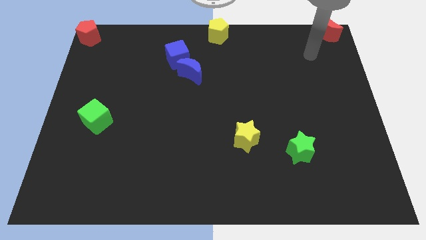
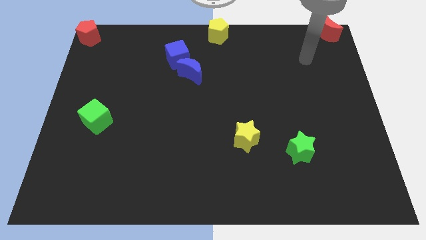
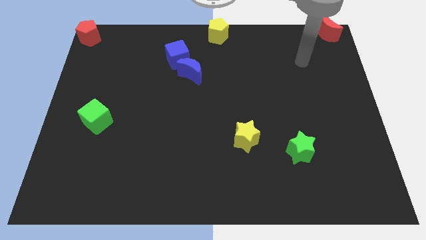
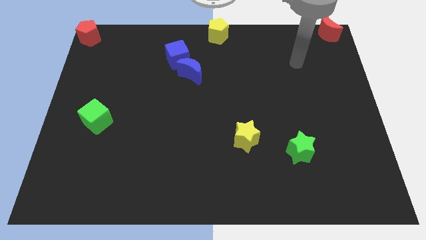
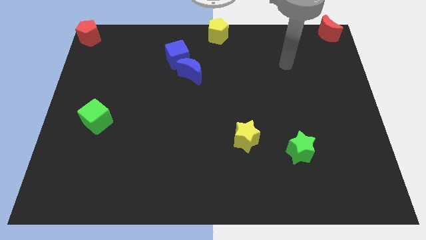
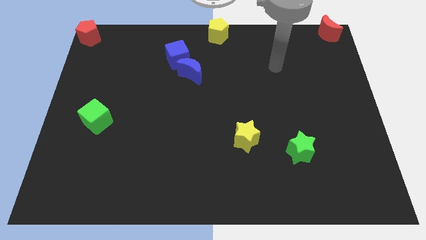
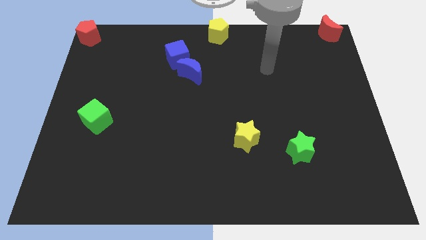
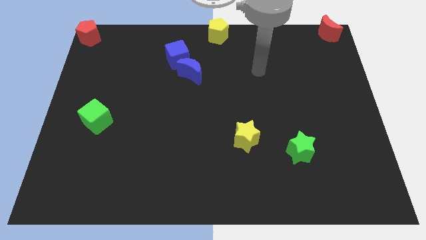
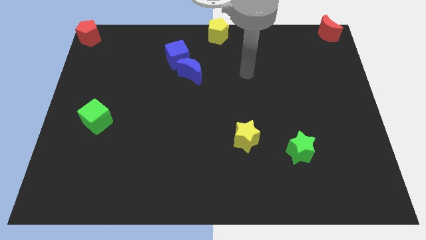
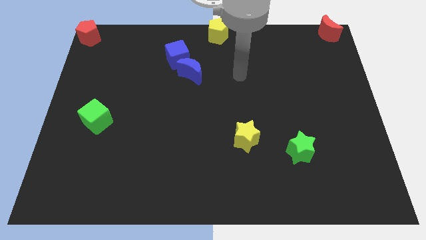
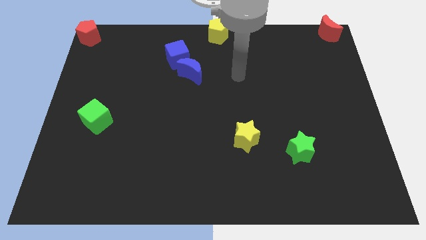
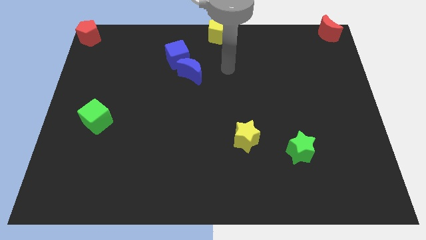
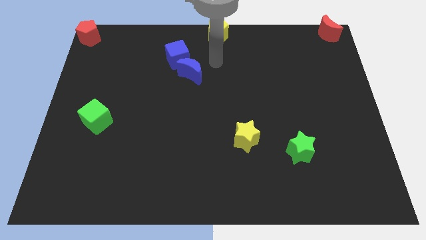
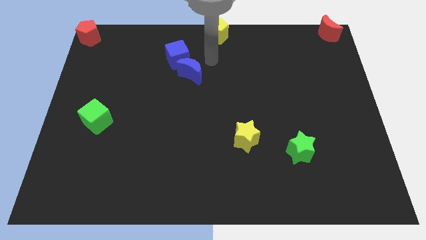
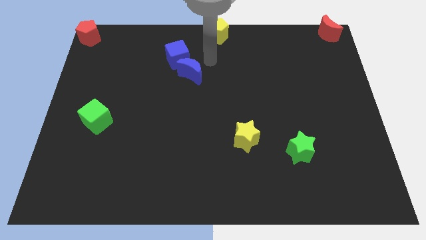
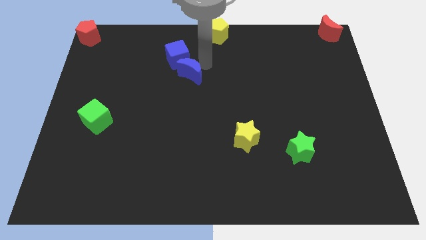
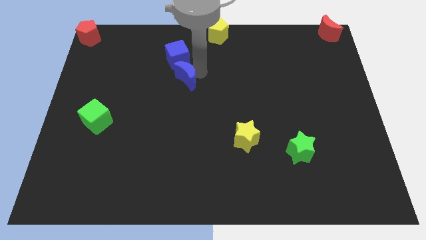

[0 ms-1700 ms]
place your arm to the top of blue moon

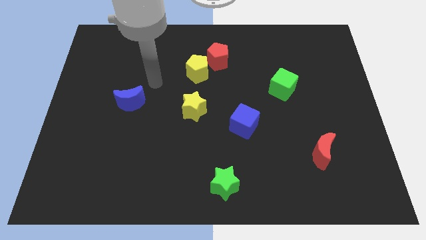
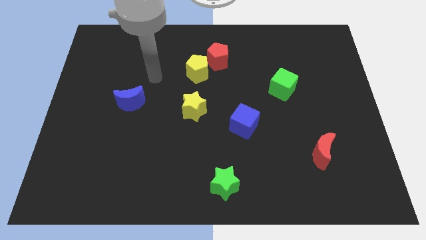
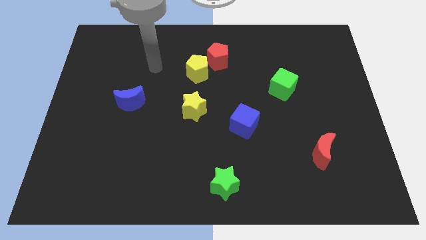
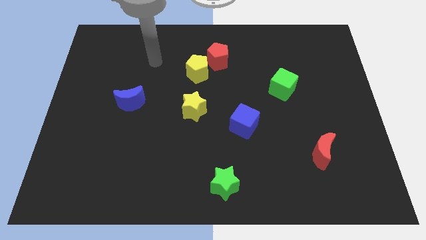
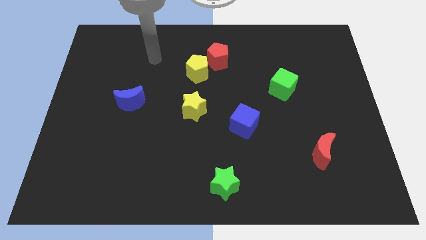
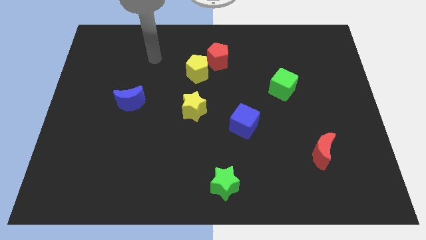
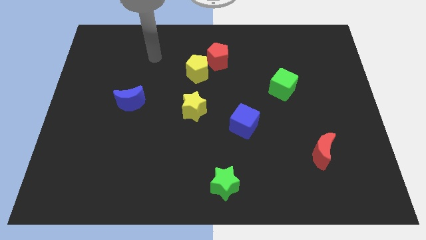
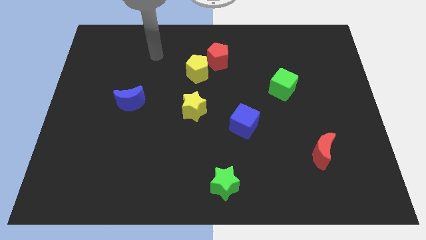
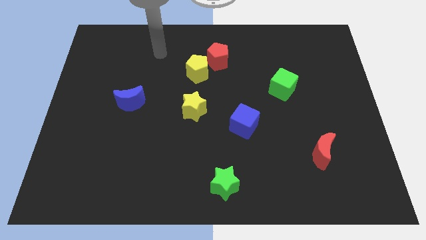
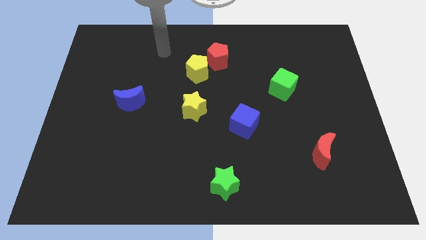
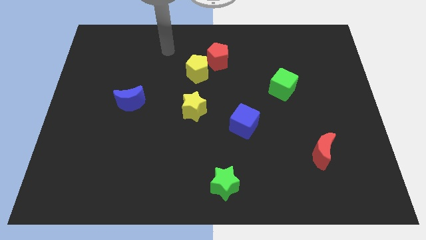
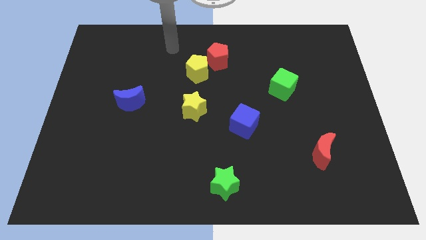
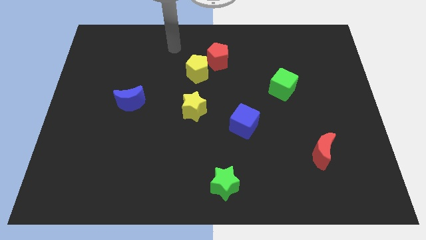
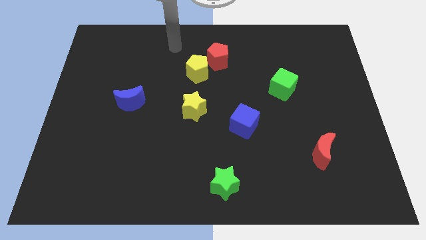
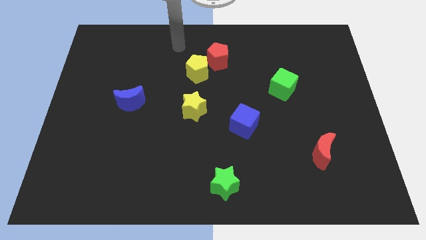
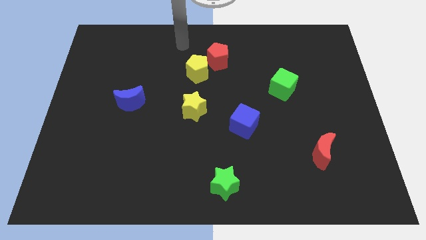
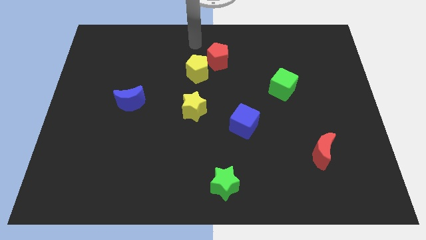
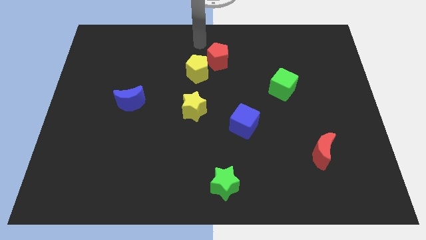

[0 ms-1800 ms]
point your arm at the top of the yellow pentagon

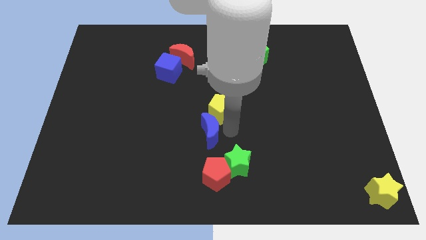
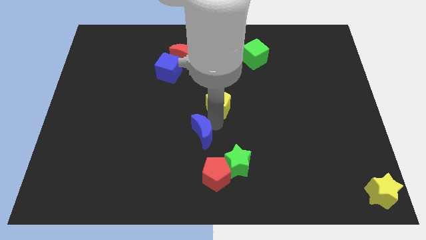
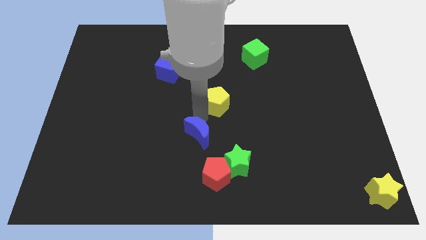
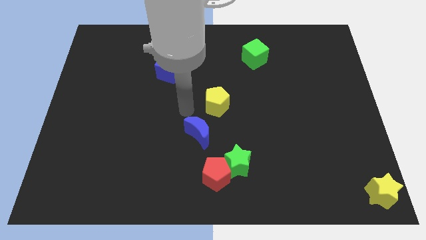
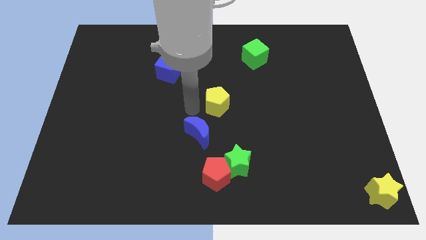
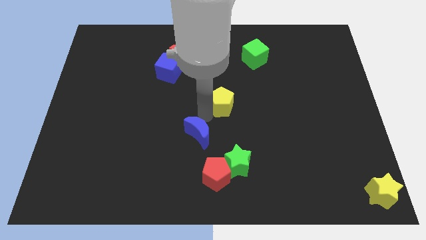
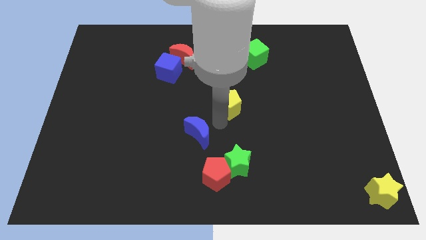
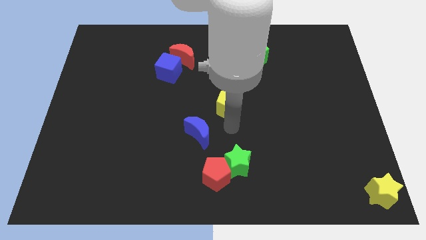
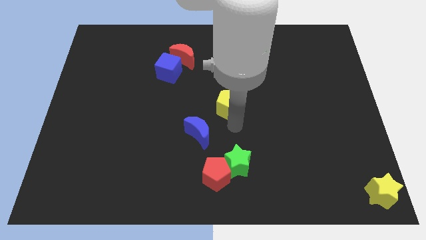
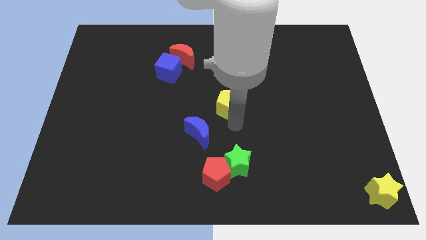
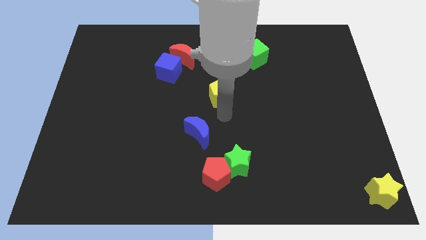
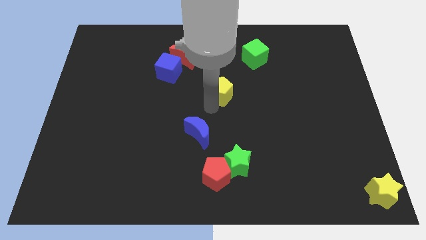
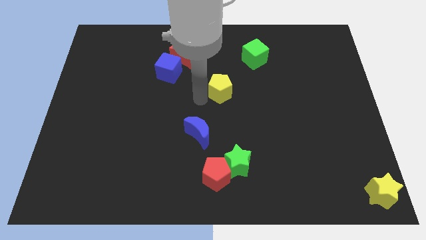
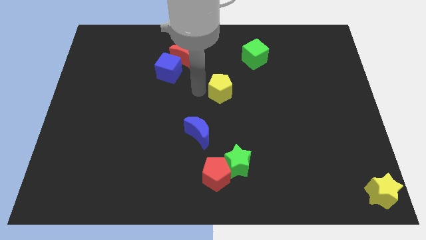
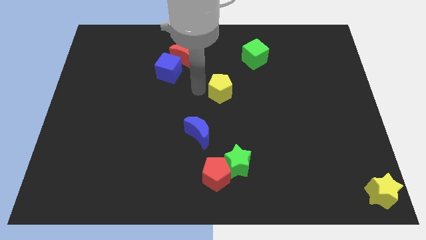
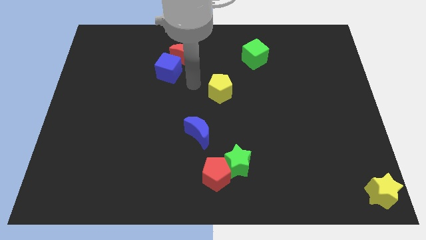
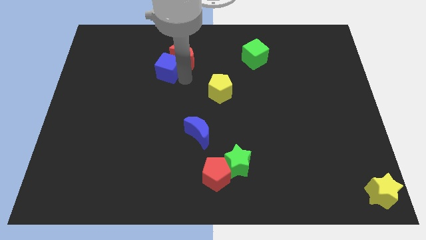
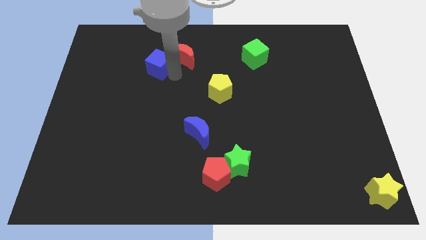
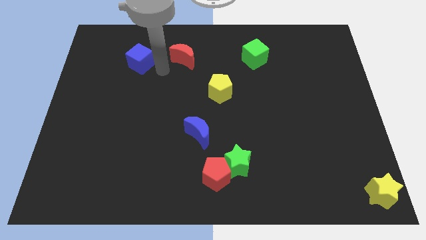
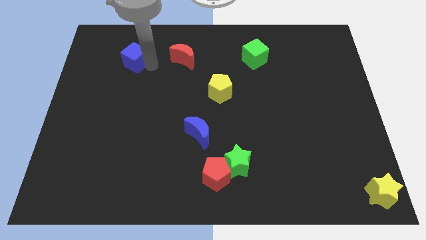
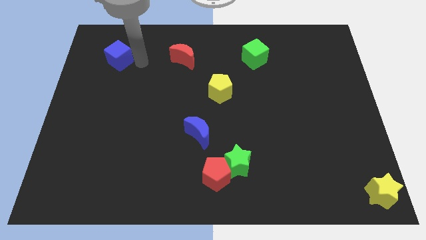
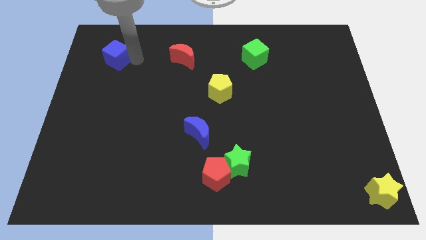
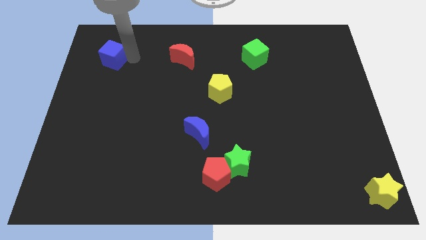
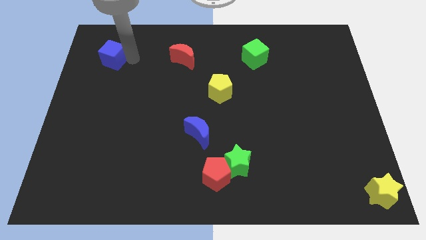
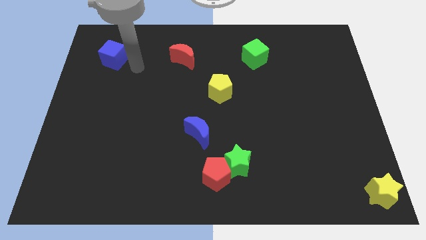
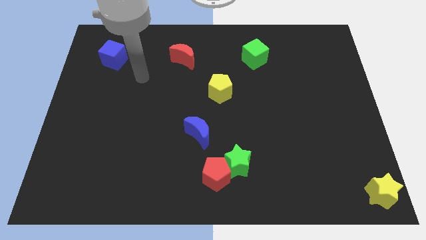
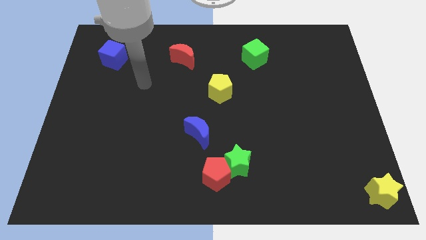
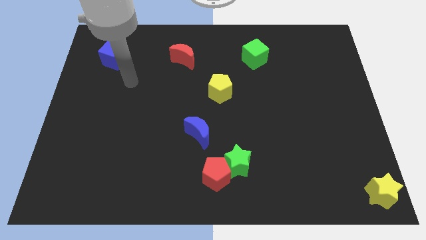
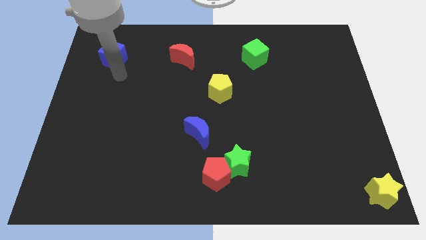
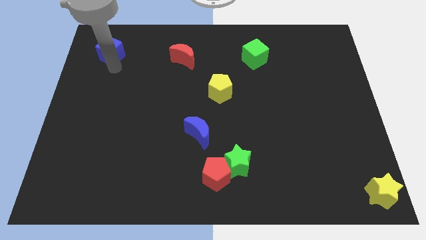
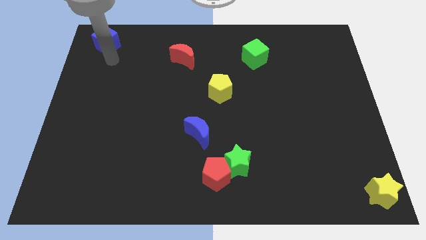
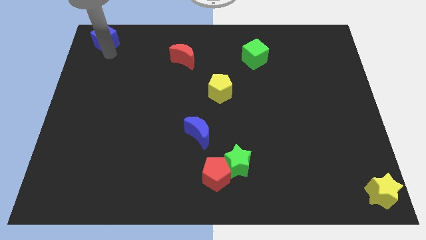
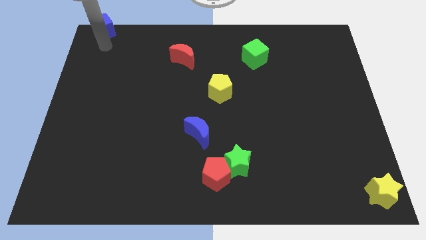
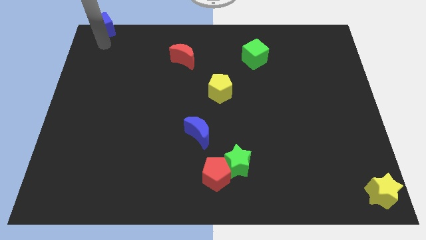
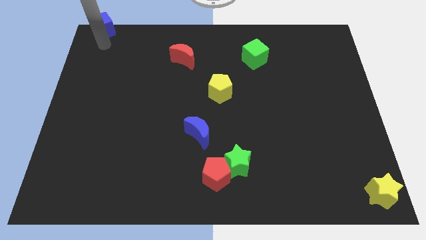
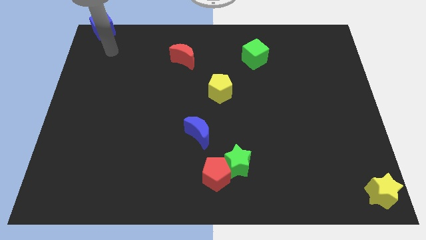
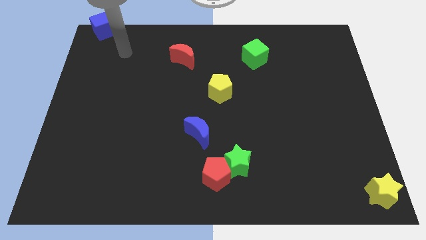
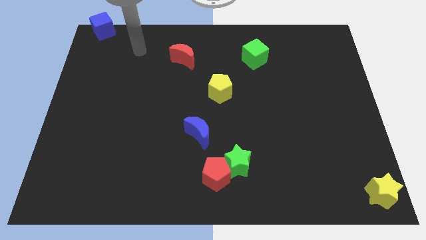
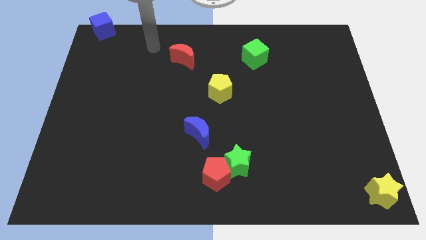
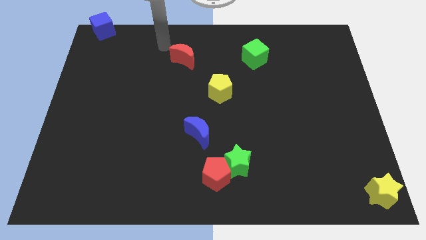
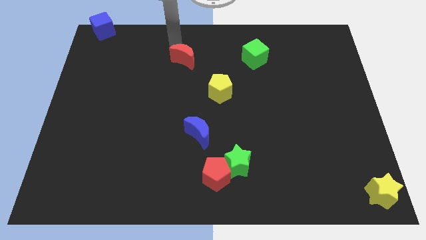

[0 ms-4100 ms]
push the blue cube to the left top corner

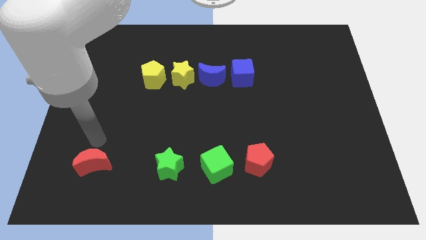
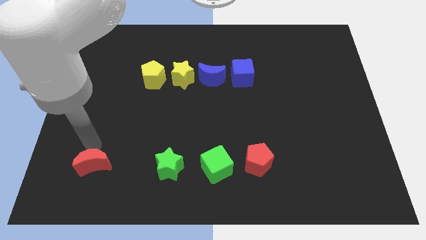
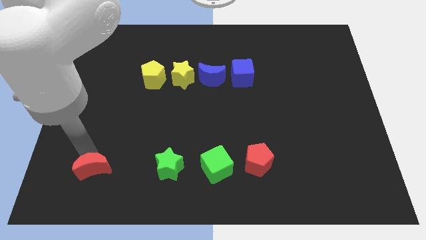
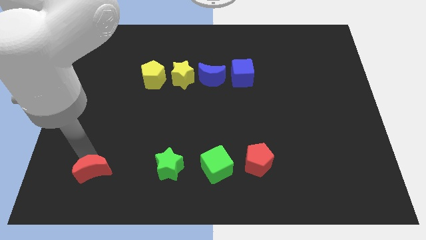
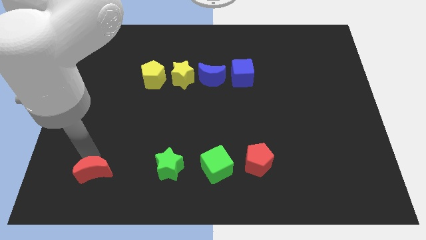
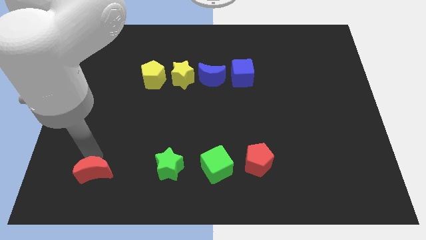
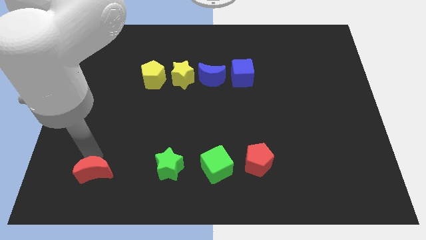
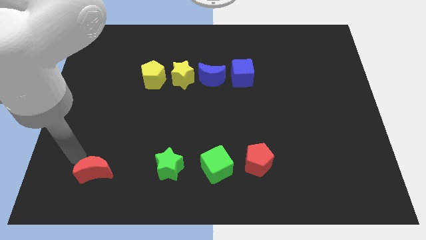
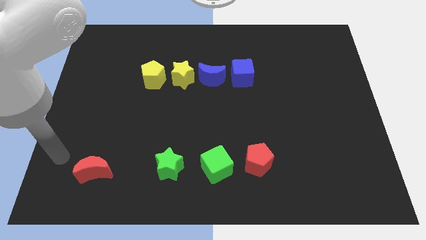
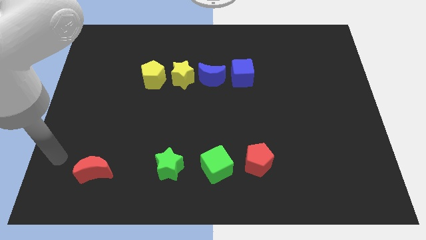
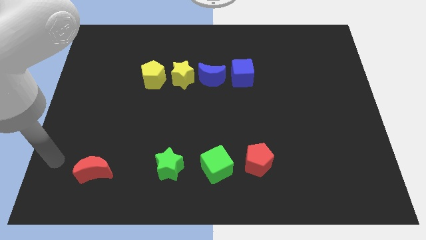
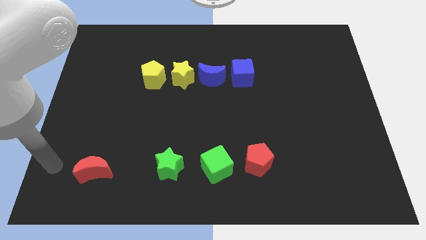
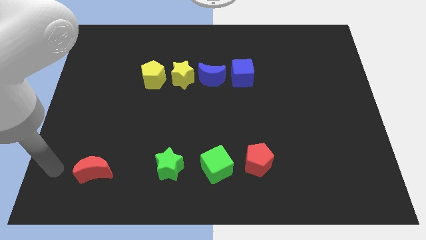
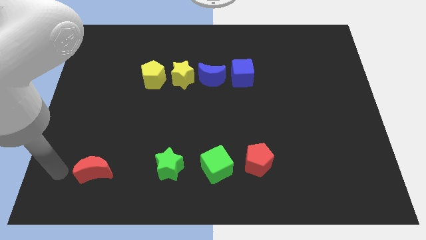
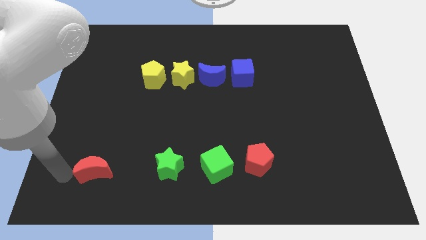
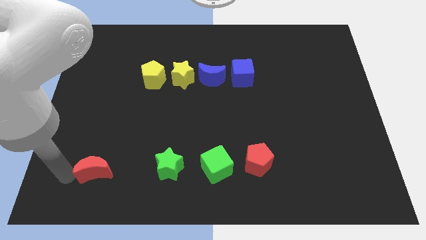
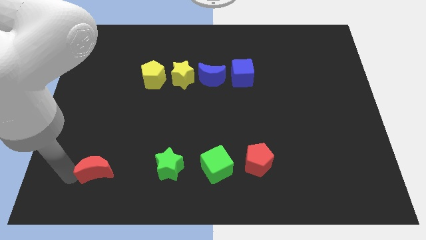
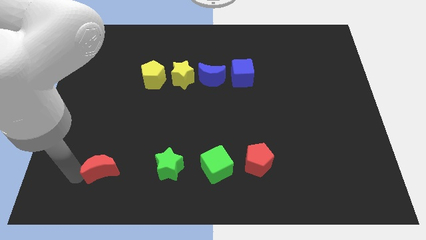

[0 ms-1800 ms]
move the red crescent to the left side of the green star
